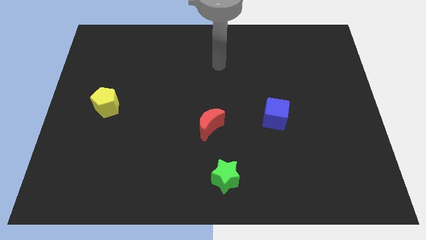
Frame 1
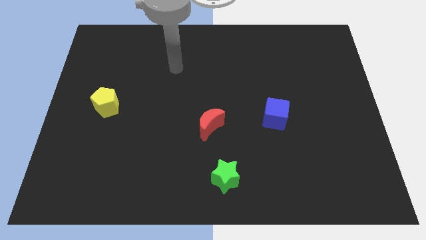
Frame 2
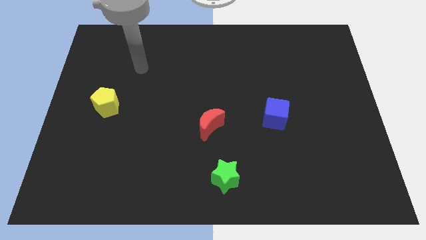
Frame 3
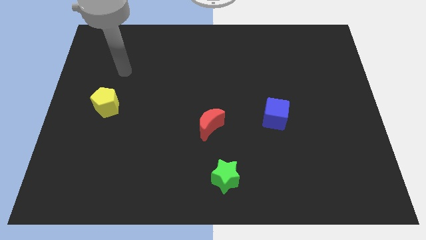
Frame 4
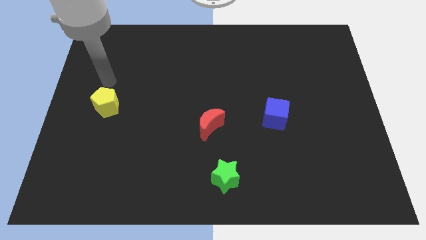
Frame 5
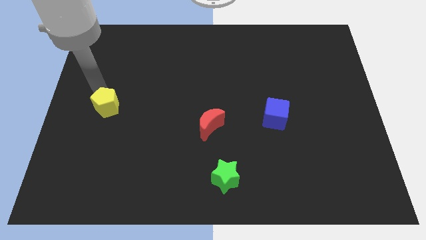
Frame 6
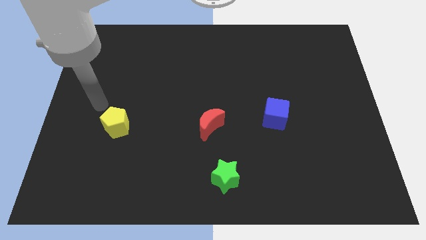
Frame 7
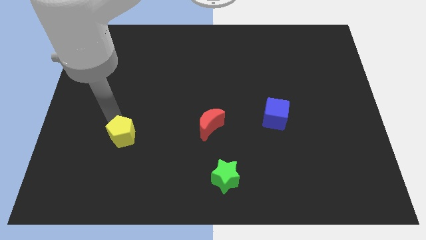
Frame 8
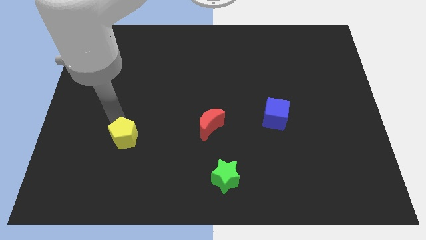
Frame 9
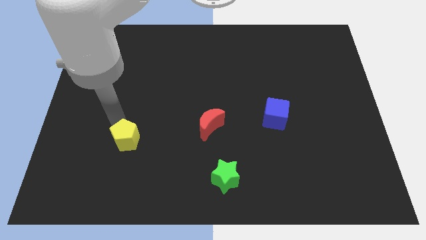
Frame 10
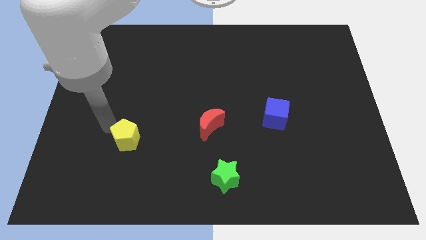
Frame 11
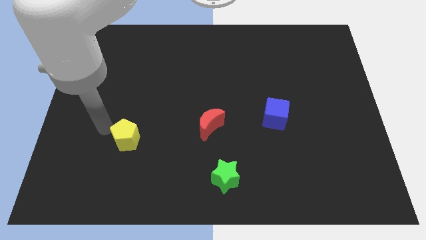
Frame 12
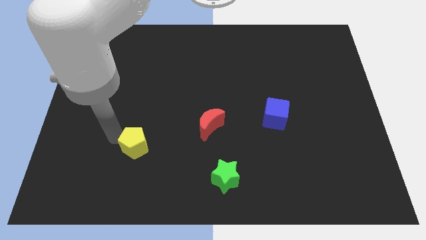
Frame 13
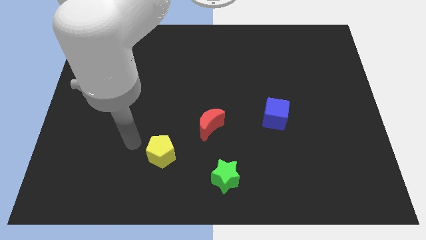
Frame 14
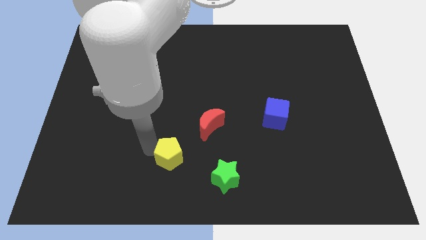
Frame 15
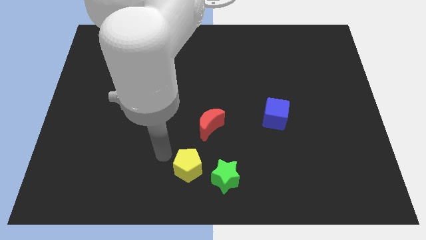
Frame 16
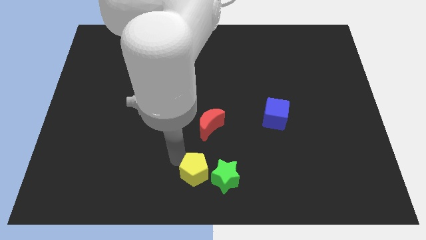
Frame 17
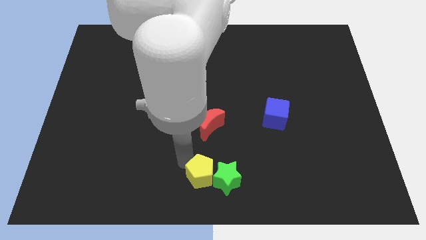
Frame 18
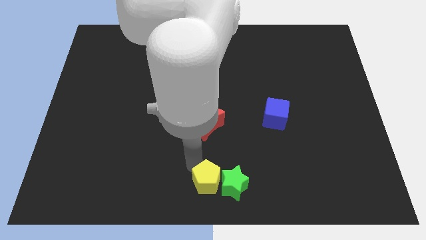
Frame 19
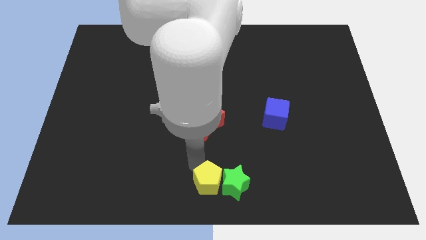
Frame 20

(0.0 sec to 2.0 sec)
push the yellow pentagon close to the star

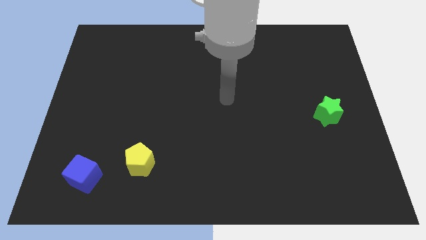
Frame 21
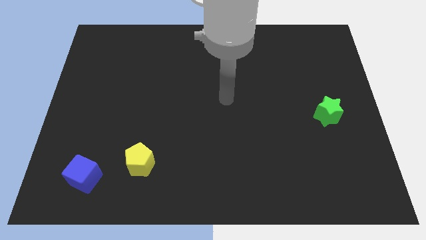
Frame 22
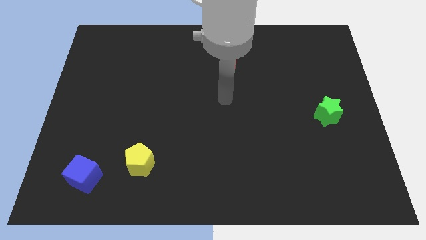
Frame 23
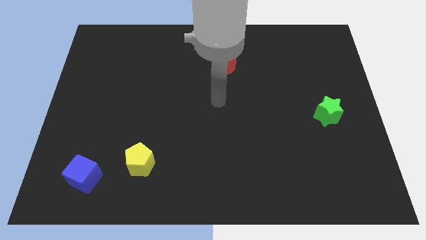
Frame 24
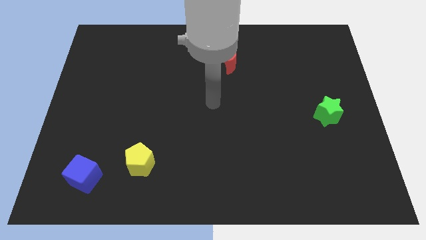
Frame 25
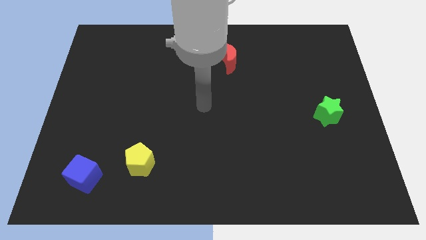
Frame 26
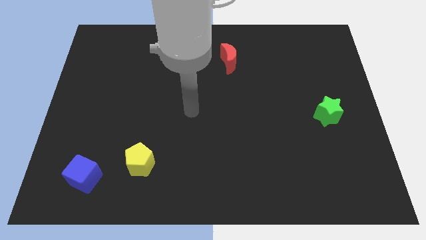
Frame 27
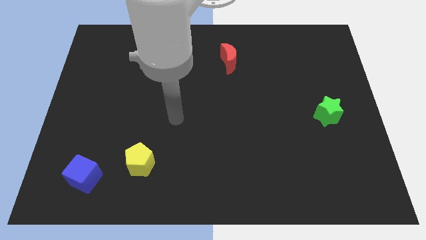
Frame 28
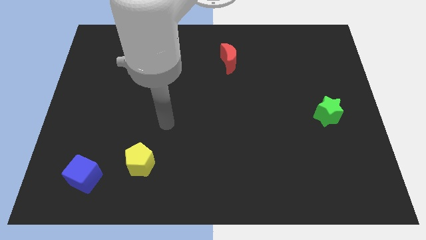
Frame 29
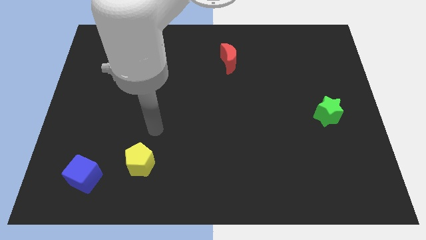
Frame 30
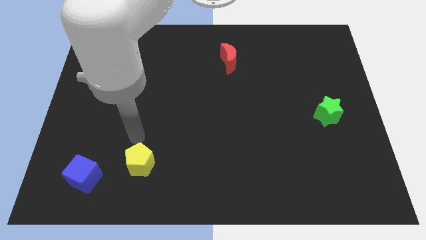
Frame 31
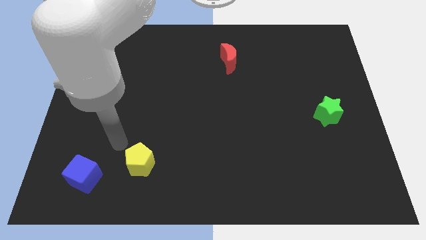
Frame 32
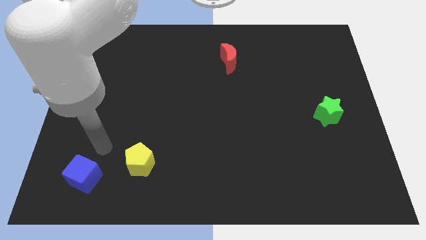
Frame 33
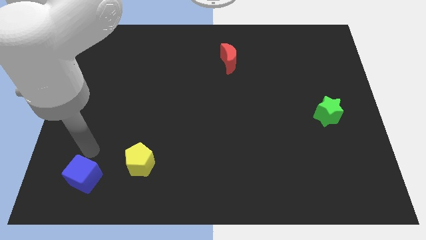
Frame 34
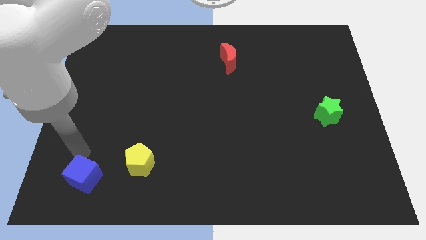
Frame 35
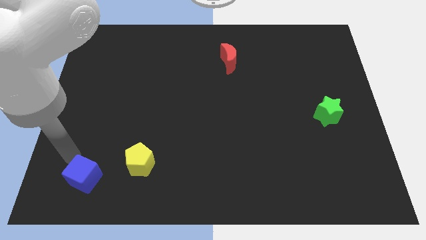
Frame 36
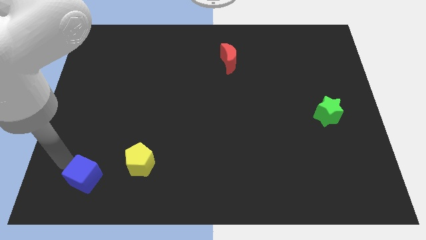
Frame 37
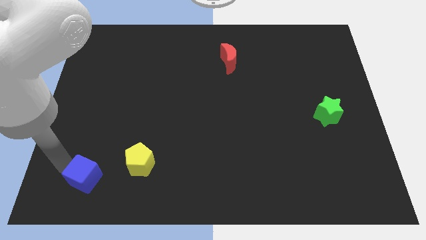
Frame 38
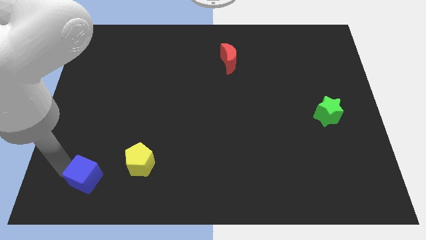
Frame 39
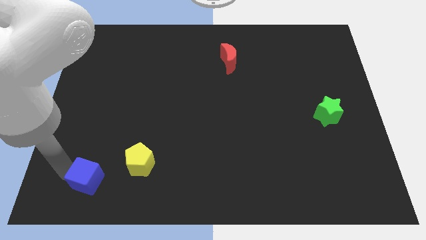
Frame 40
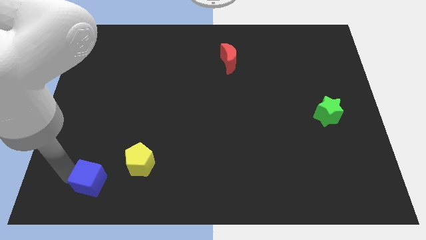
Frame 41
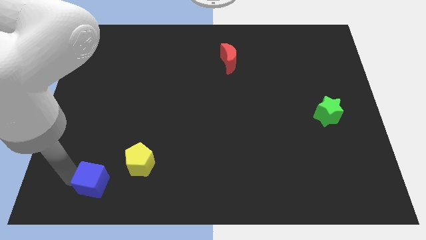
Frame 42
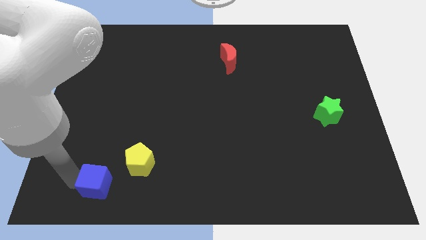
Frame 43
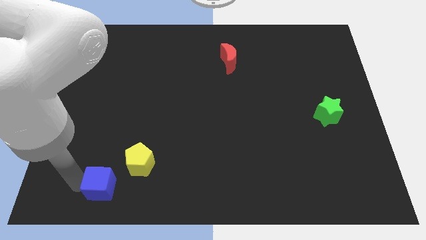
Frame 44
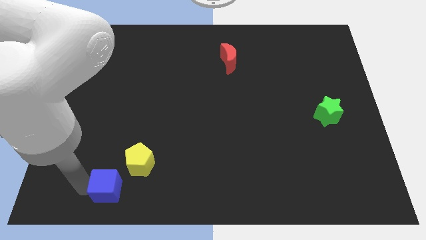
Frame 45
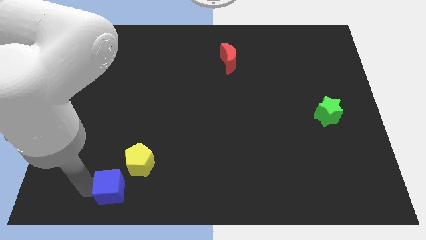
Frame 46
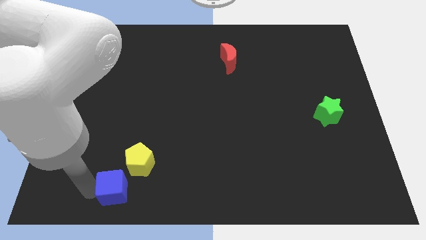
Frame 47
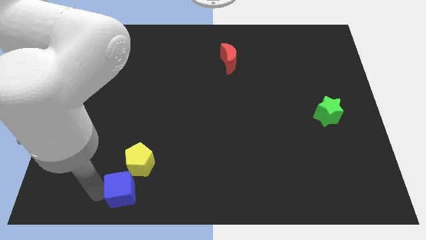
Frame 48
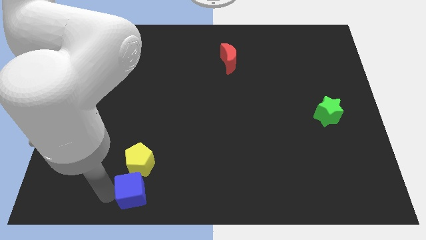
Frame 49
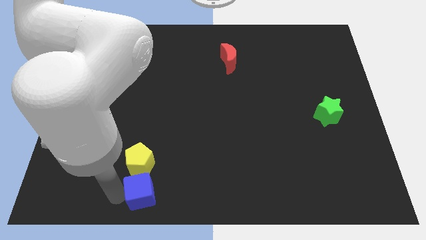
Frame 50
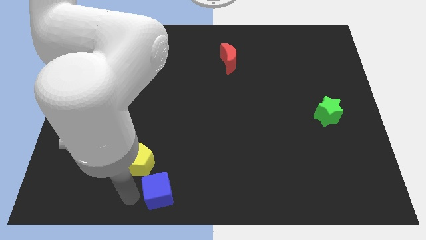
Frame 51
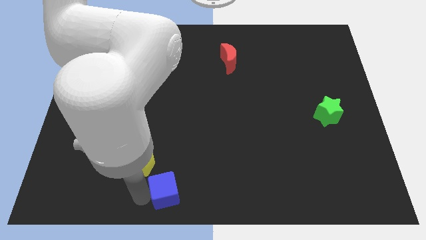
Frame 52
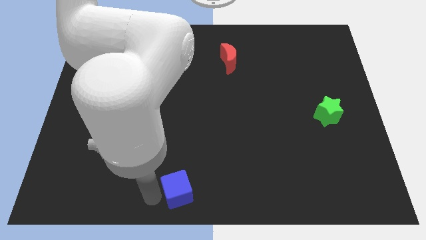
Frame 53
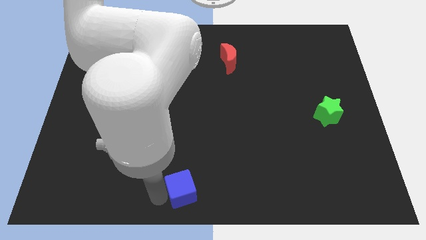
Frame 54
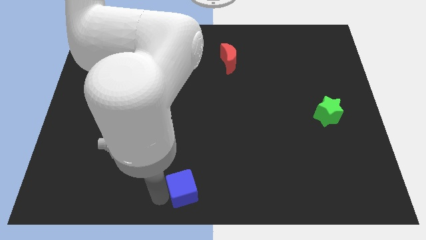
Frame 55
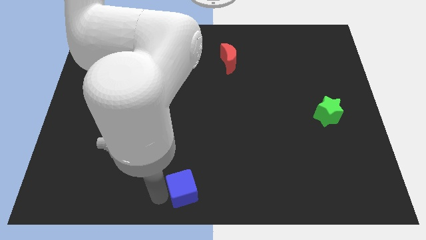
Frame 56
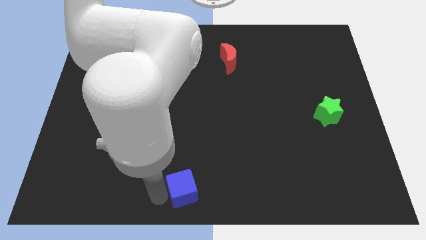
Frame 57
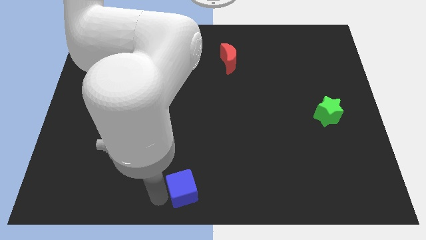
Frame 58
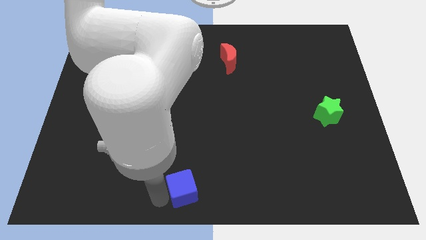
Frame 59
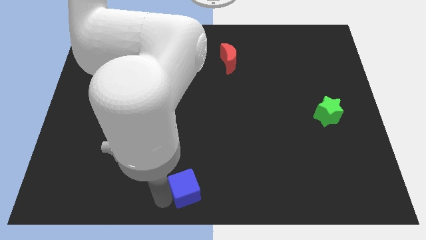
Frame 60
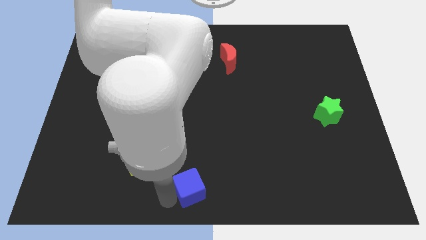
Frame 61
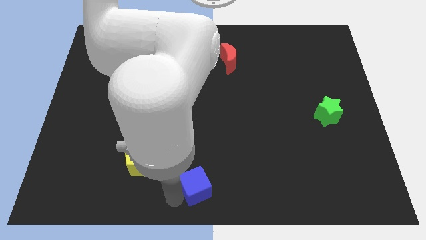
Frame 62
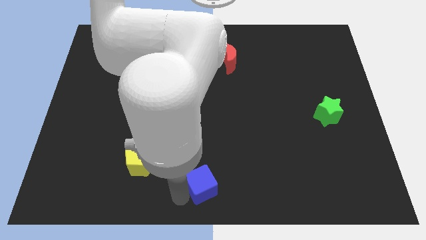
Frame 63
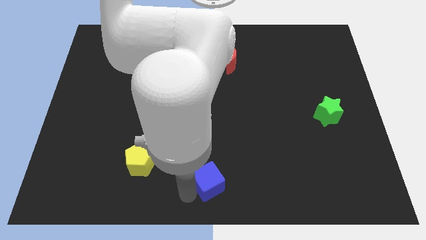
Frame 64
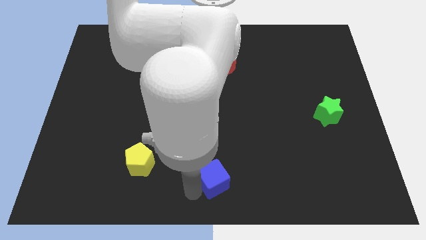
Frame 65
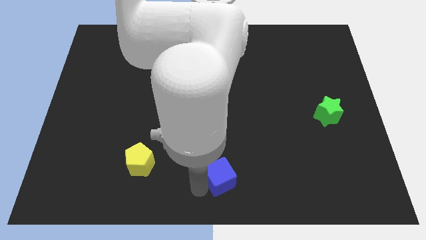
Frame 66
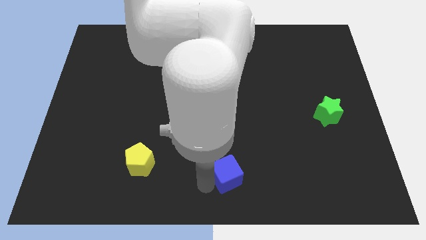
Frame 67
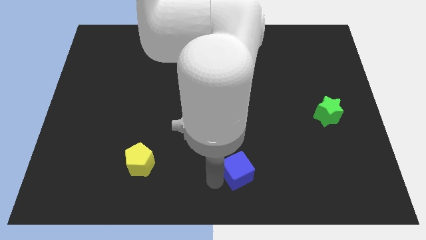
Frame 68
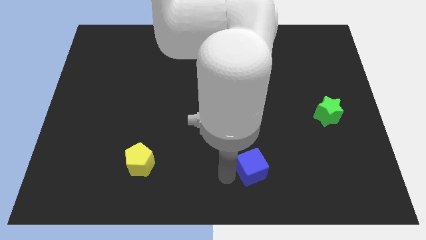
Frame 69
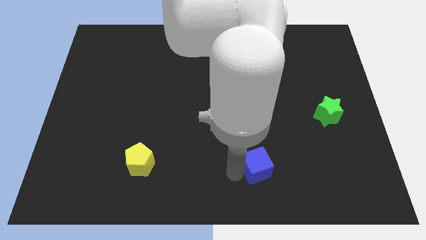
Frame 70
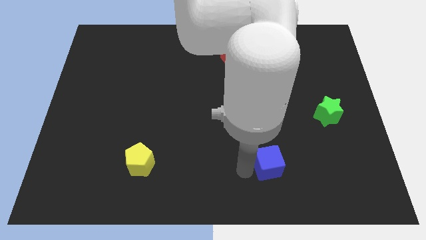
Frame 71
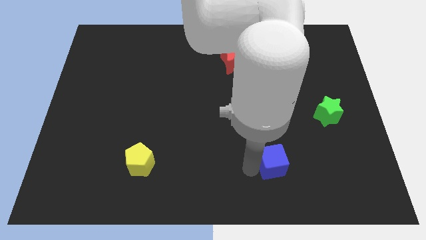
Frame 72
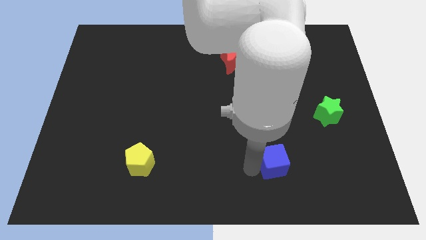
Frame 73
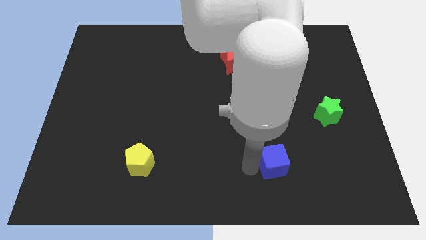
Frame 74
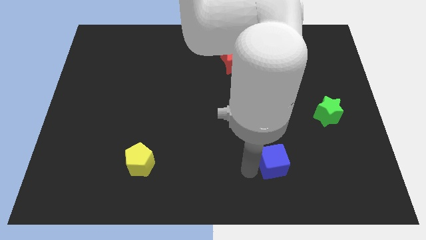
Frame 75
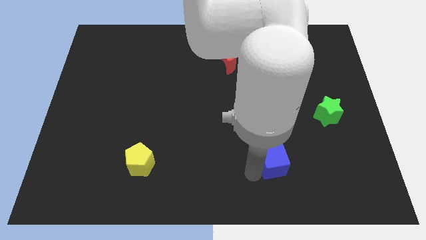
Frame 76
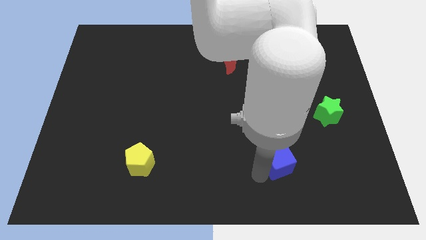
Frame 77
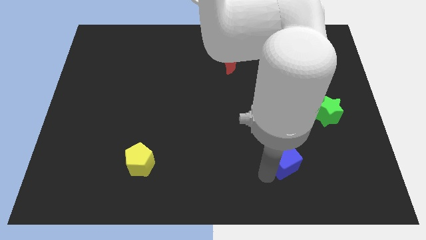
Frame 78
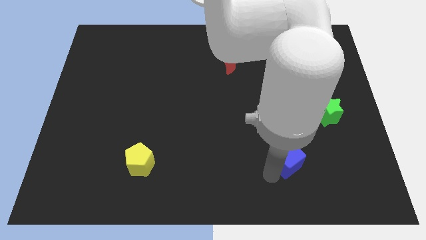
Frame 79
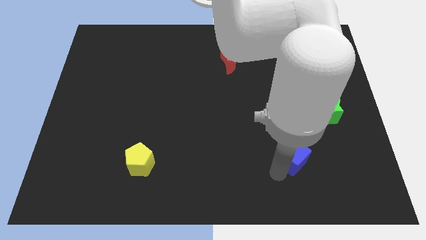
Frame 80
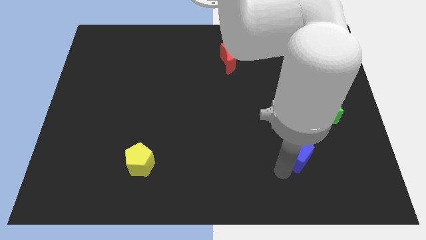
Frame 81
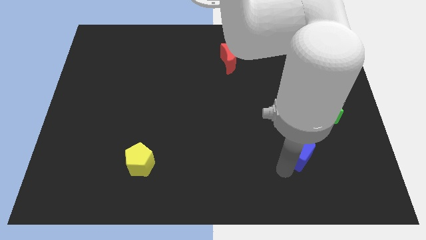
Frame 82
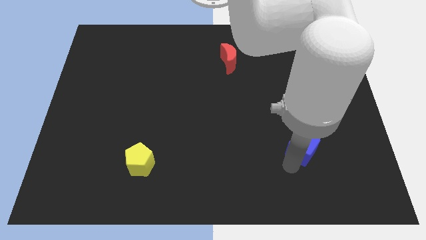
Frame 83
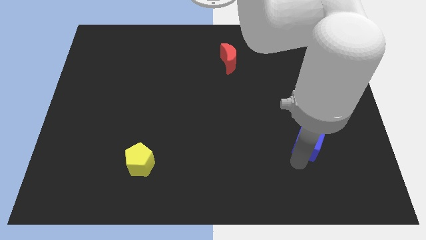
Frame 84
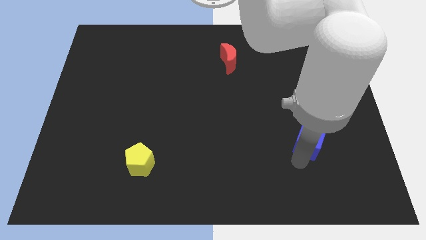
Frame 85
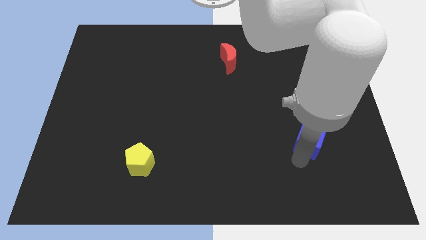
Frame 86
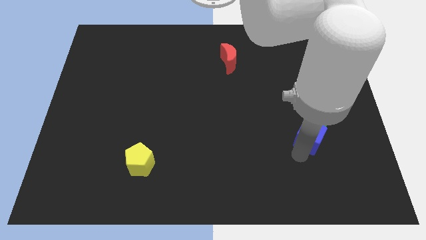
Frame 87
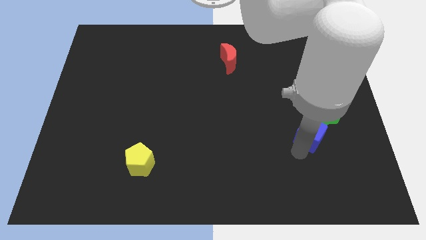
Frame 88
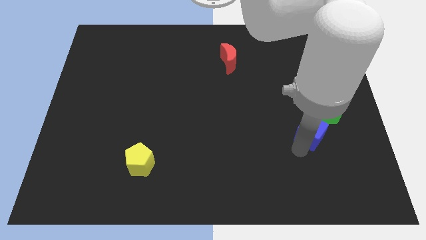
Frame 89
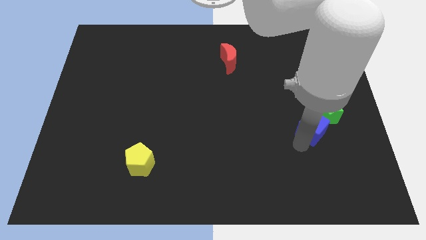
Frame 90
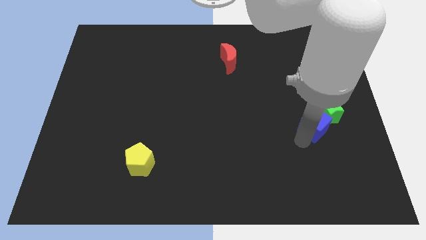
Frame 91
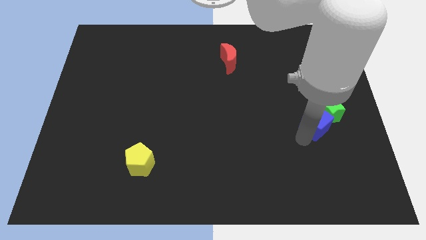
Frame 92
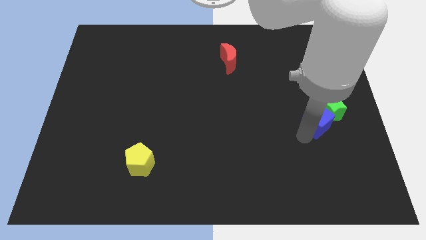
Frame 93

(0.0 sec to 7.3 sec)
slide the blue block towards the green star
